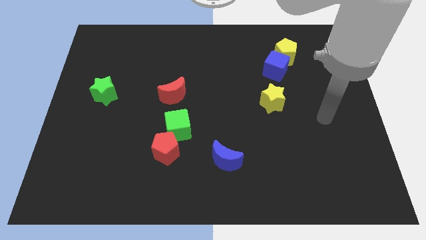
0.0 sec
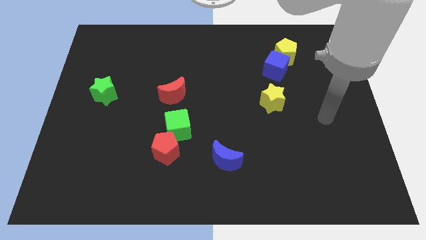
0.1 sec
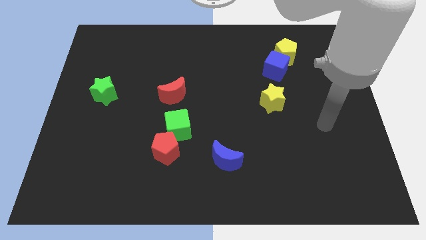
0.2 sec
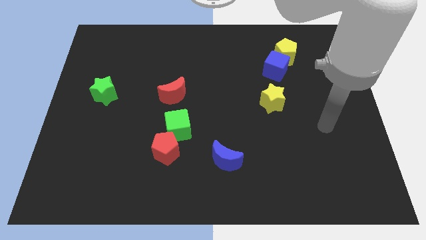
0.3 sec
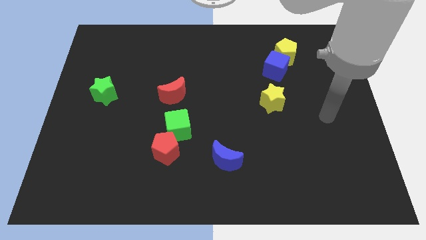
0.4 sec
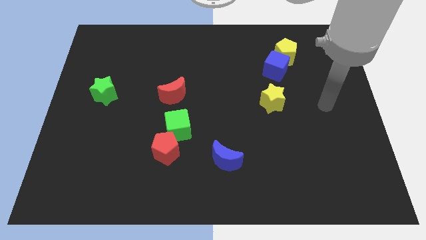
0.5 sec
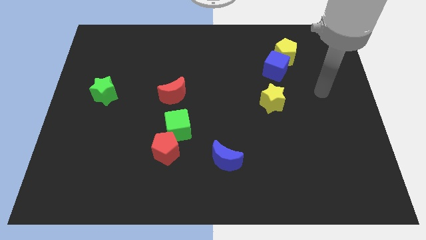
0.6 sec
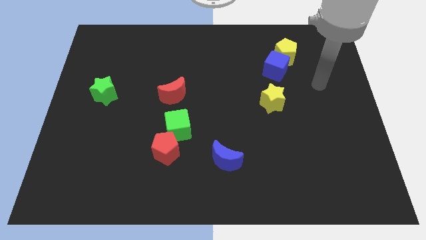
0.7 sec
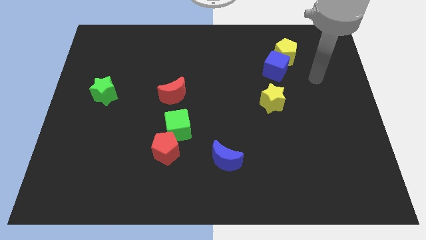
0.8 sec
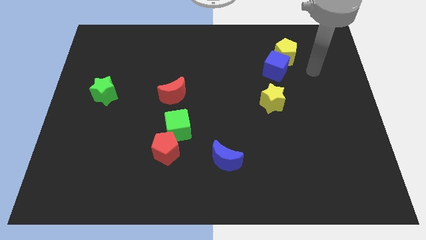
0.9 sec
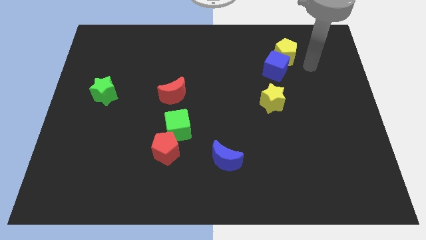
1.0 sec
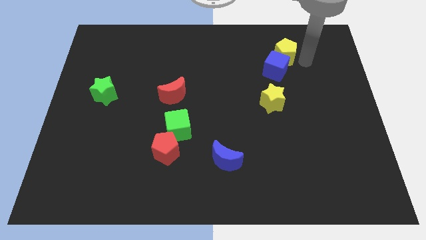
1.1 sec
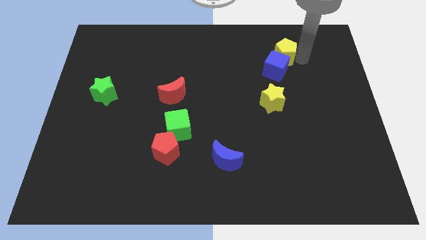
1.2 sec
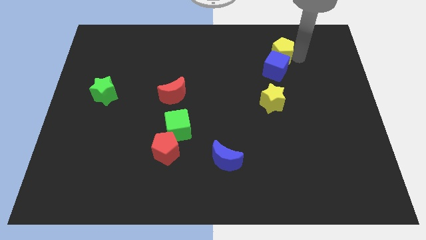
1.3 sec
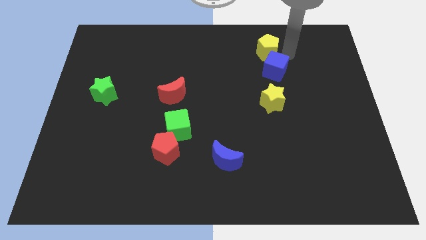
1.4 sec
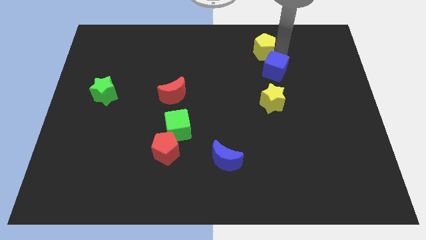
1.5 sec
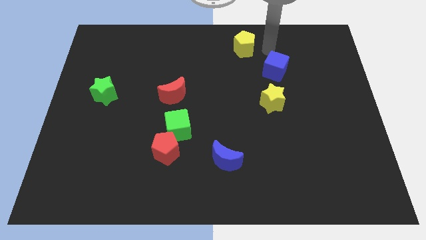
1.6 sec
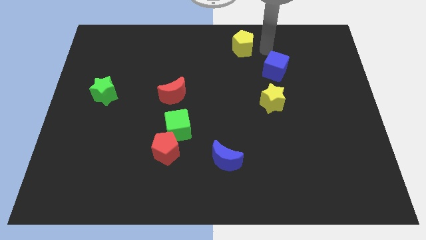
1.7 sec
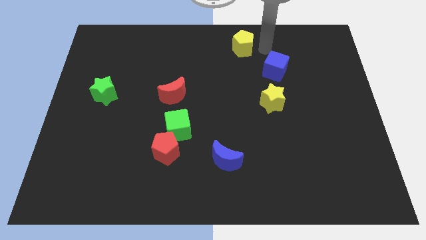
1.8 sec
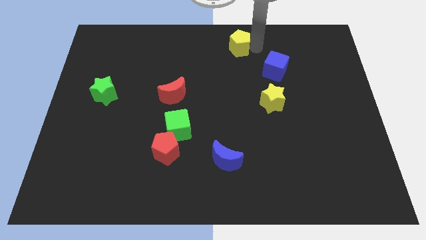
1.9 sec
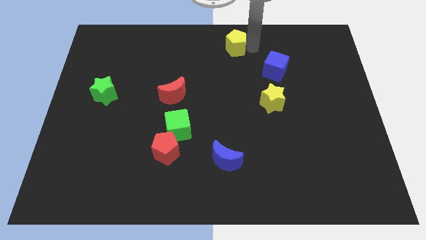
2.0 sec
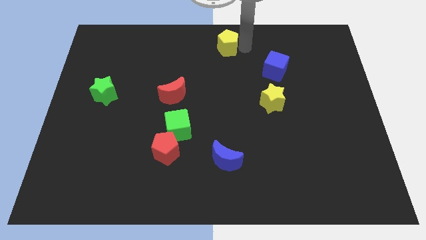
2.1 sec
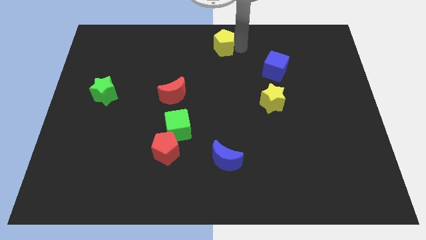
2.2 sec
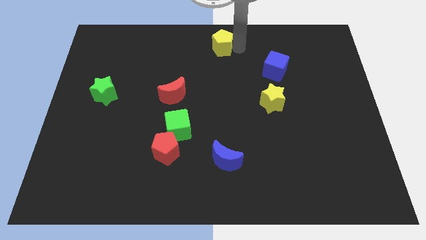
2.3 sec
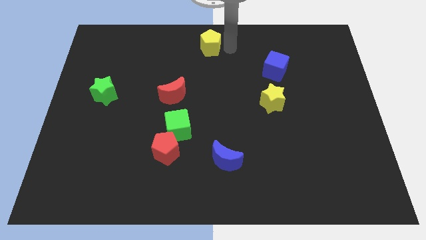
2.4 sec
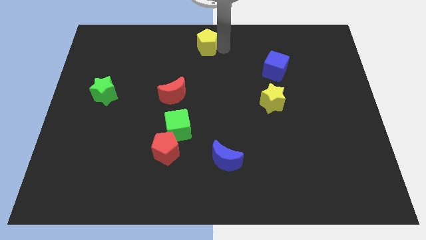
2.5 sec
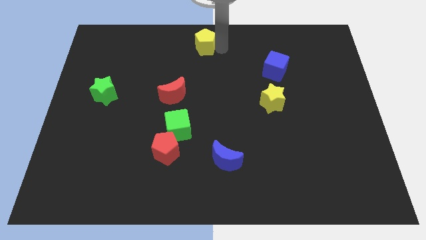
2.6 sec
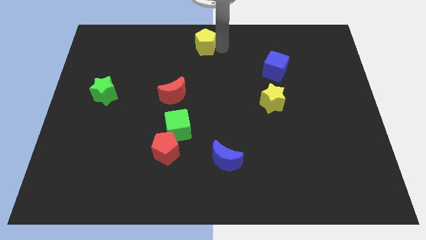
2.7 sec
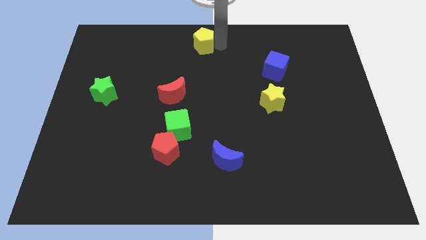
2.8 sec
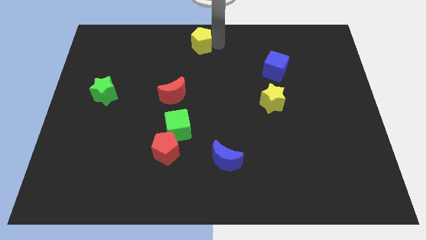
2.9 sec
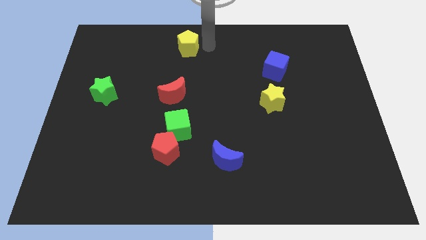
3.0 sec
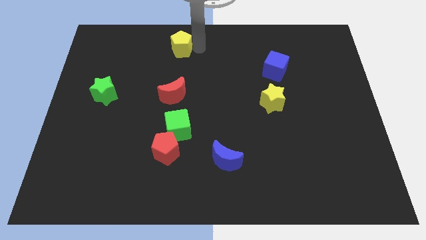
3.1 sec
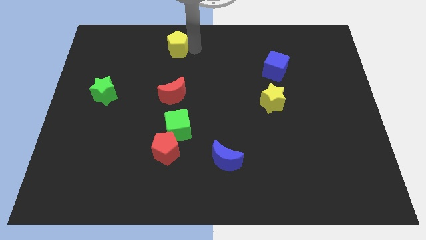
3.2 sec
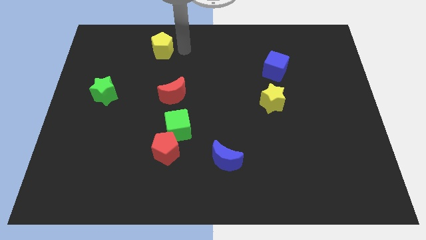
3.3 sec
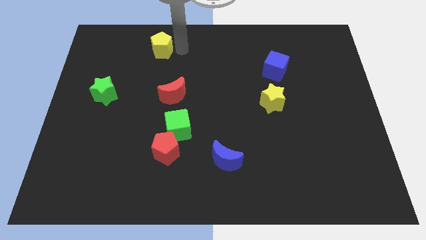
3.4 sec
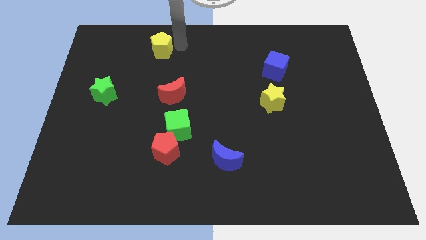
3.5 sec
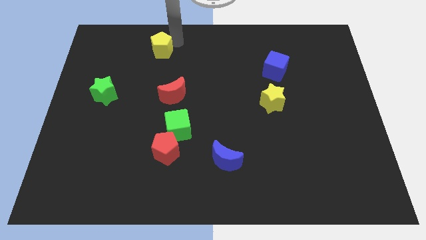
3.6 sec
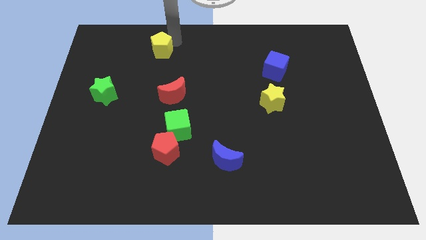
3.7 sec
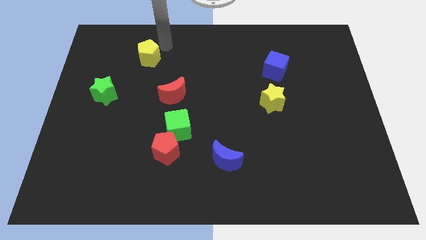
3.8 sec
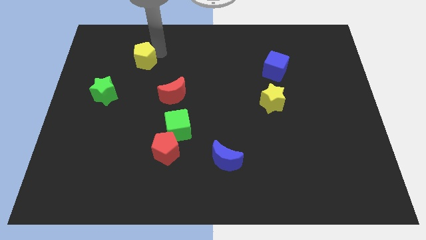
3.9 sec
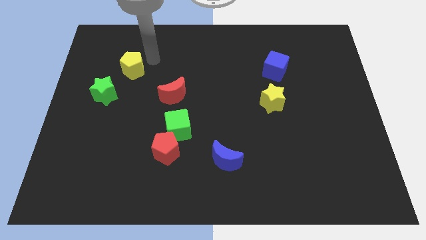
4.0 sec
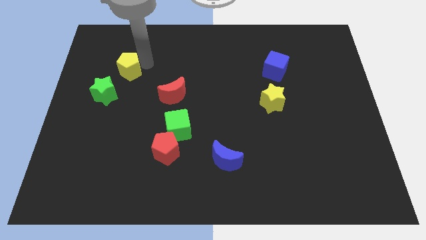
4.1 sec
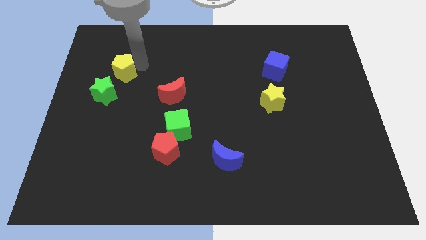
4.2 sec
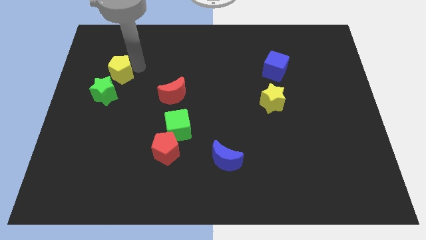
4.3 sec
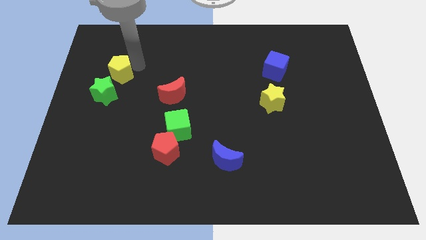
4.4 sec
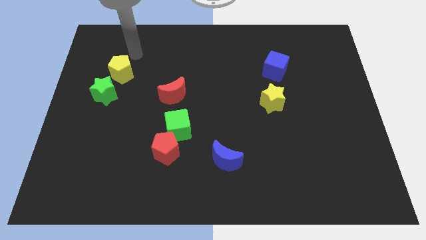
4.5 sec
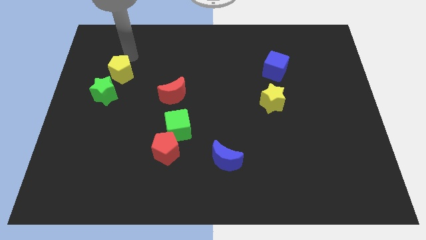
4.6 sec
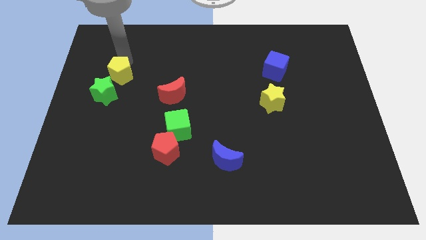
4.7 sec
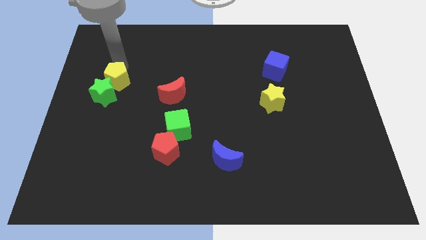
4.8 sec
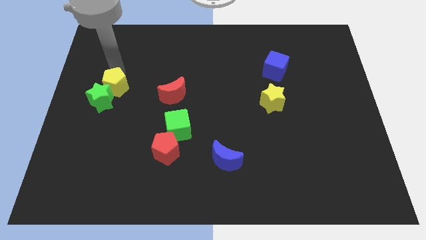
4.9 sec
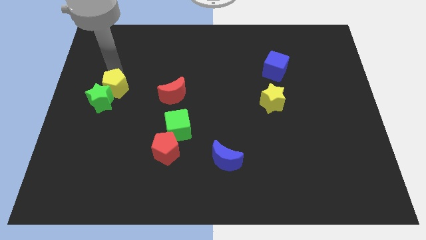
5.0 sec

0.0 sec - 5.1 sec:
push the yellow pentagon next to the green star

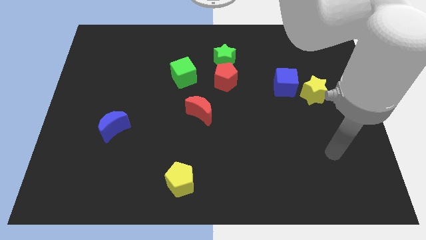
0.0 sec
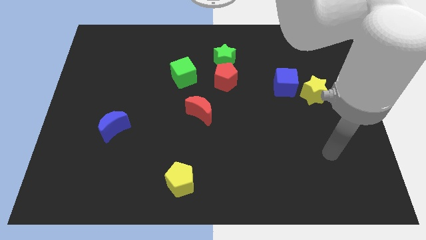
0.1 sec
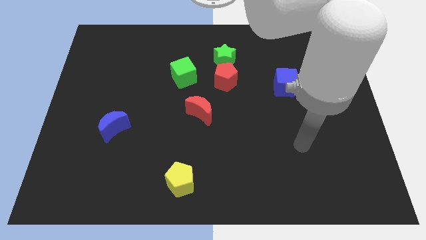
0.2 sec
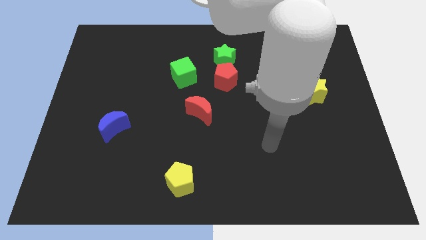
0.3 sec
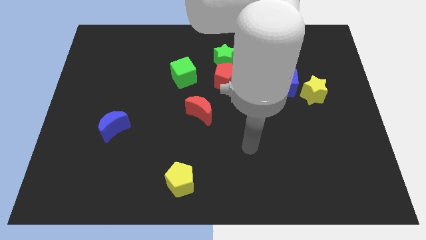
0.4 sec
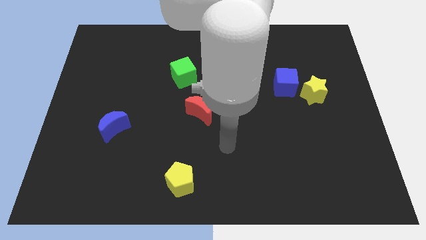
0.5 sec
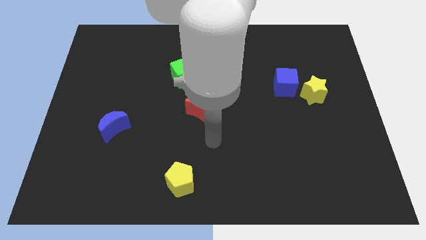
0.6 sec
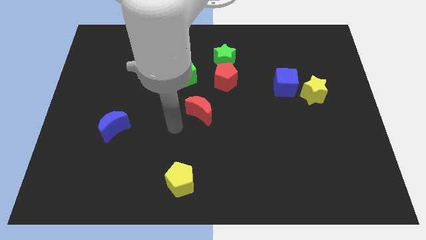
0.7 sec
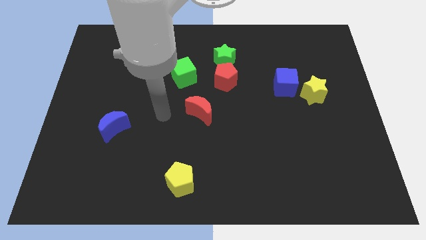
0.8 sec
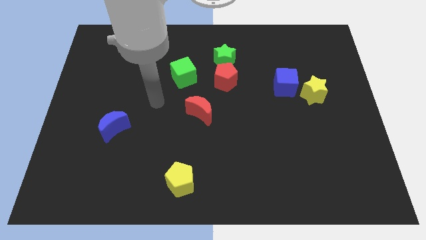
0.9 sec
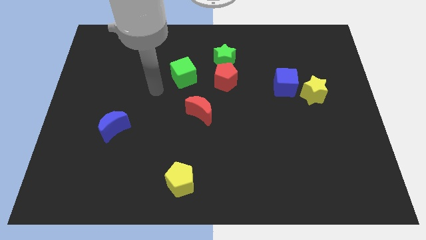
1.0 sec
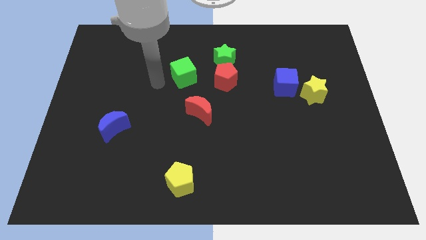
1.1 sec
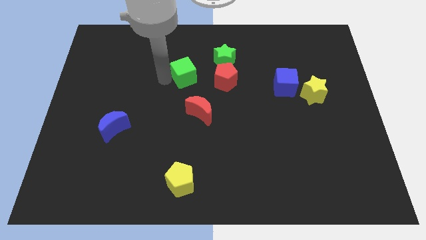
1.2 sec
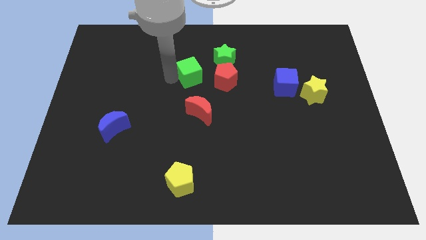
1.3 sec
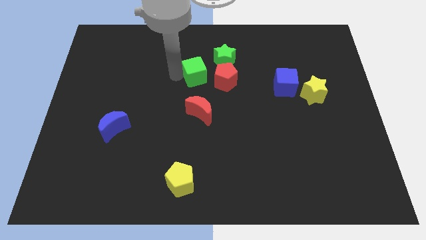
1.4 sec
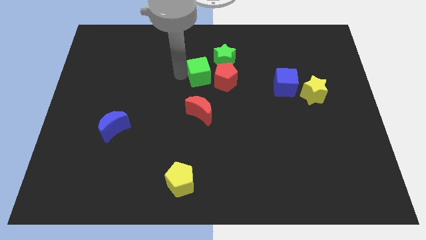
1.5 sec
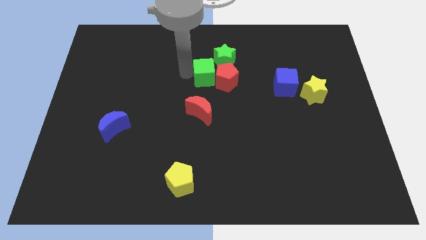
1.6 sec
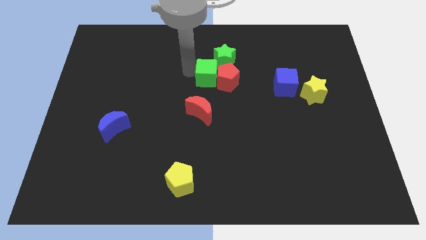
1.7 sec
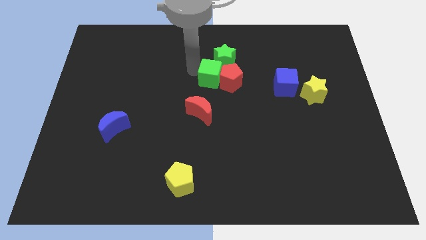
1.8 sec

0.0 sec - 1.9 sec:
push the green cube next to the red pentagon

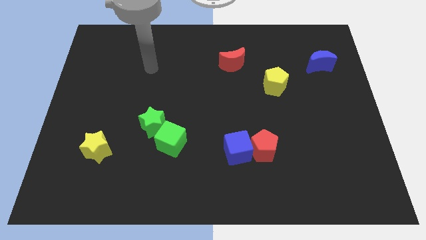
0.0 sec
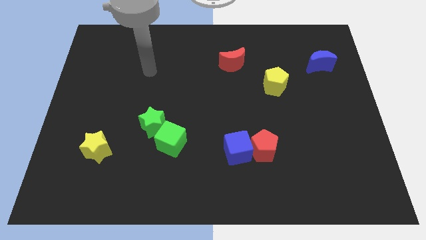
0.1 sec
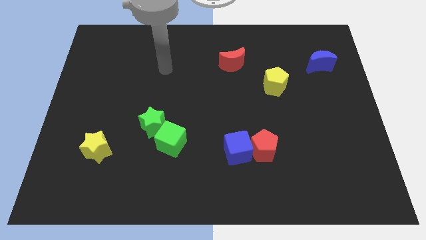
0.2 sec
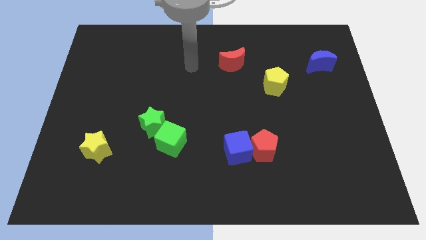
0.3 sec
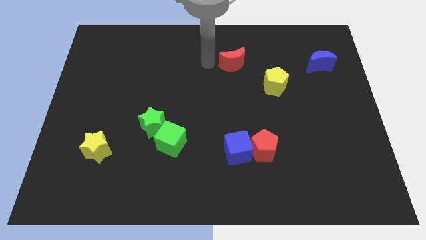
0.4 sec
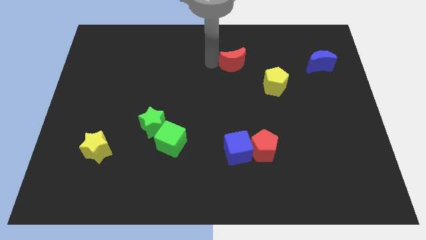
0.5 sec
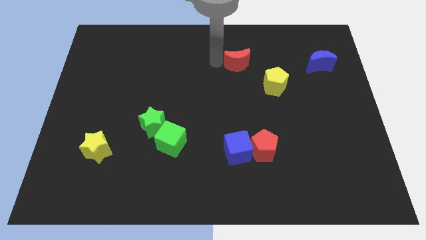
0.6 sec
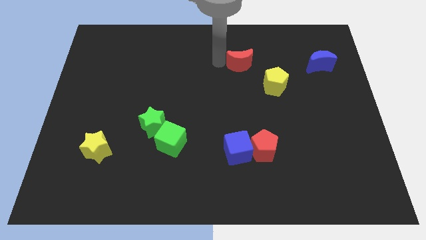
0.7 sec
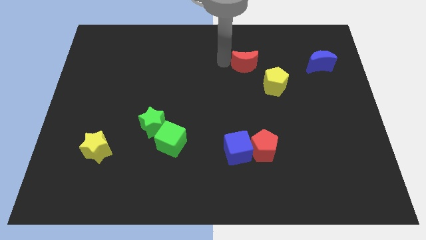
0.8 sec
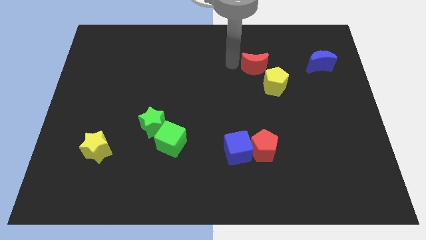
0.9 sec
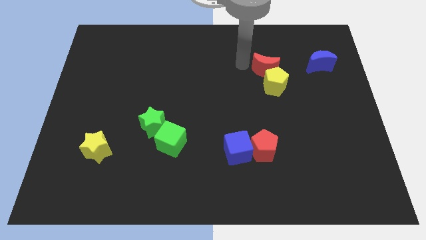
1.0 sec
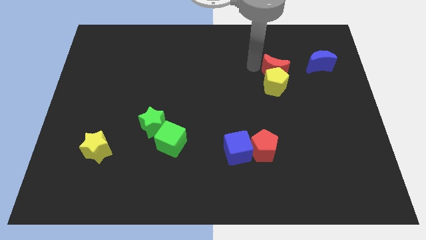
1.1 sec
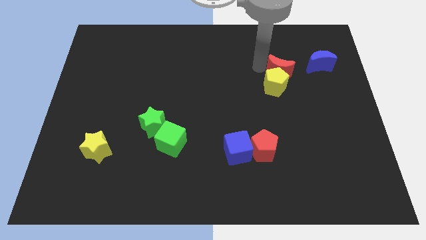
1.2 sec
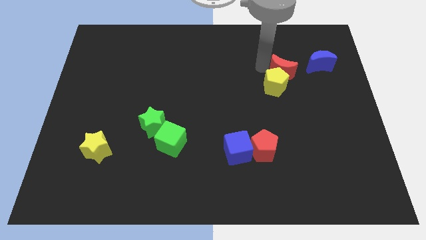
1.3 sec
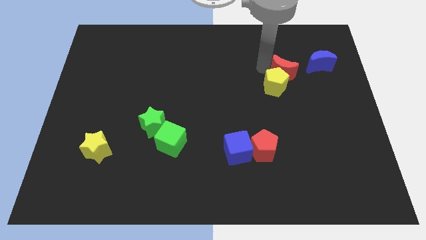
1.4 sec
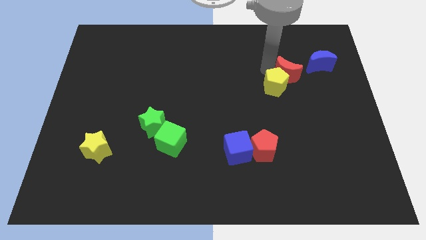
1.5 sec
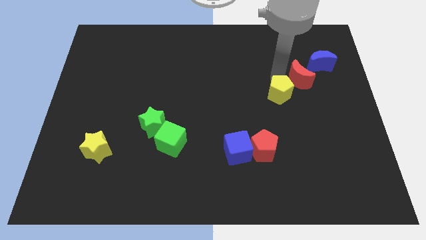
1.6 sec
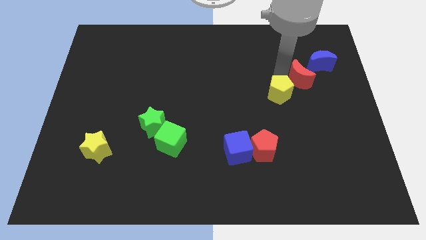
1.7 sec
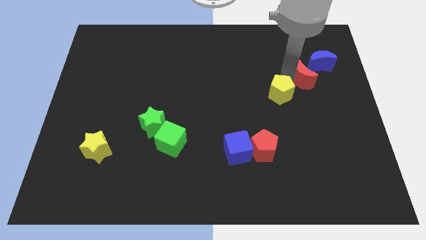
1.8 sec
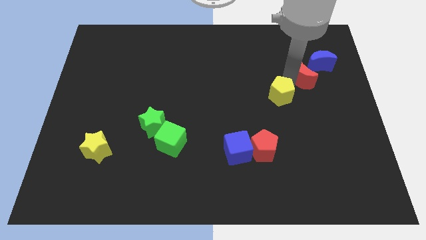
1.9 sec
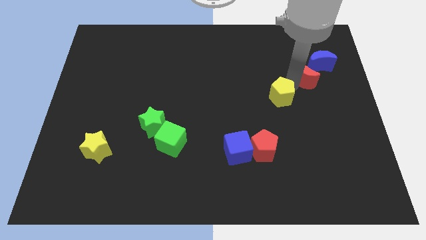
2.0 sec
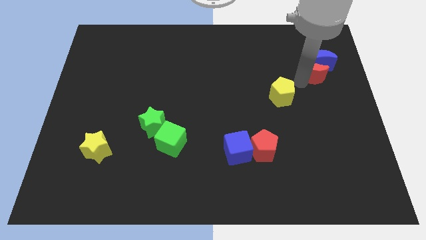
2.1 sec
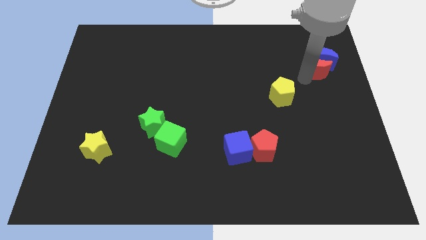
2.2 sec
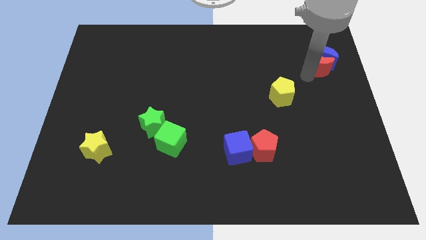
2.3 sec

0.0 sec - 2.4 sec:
push the red moon to the blue moon
